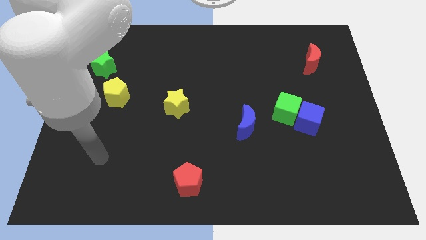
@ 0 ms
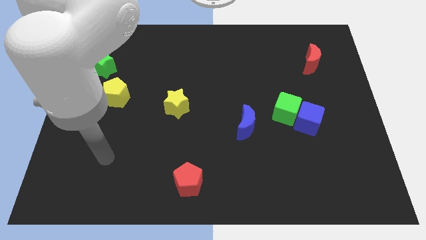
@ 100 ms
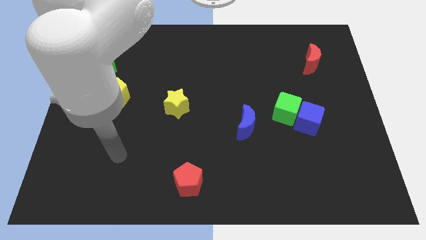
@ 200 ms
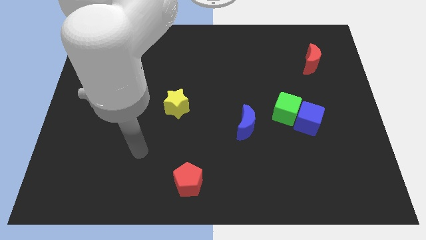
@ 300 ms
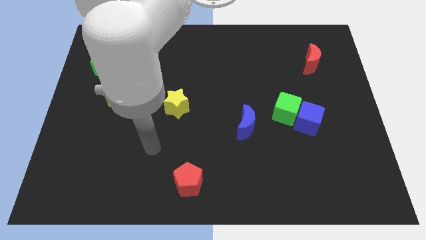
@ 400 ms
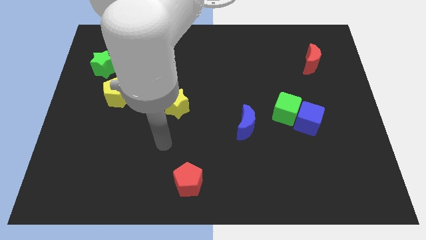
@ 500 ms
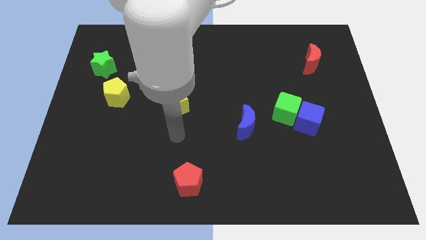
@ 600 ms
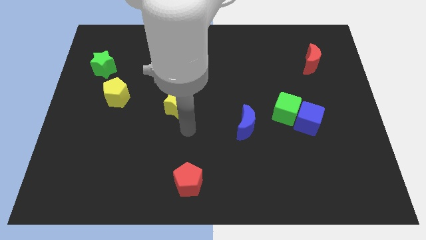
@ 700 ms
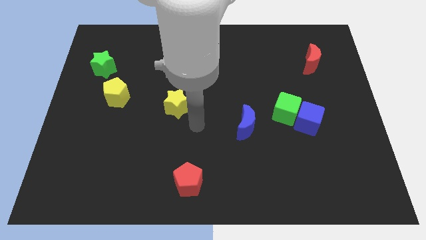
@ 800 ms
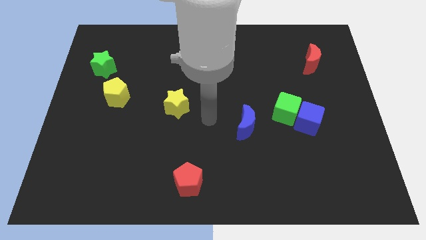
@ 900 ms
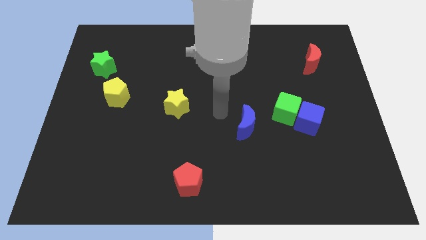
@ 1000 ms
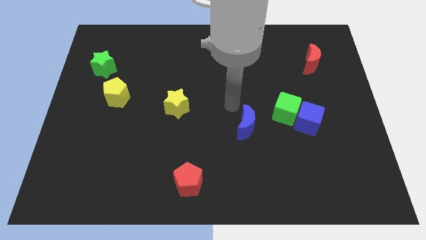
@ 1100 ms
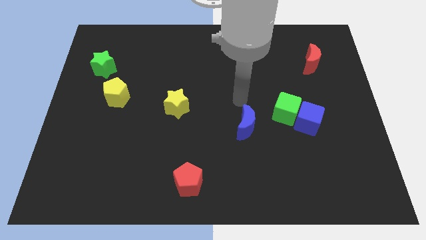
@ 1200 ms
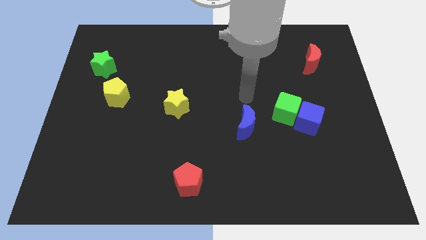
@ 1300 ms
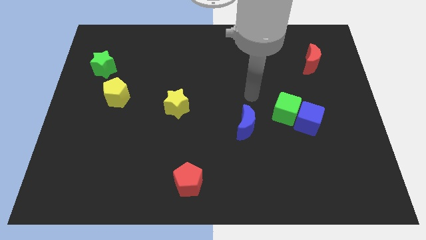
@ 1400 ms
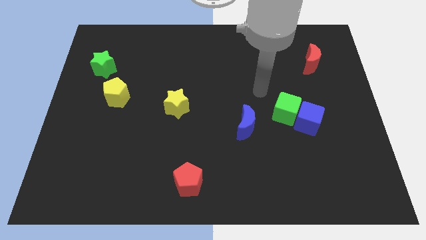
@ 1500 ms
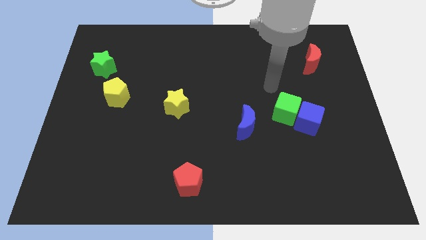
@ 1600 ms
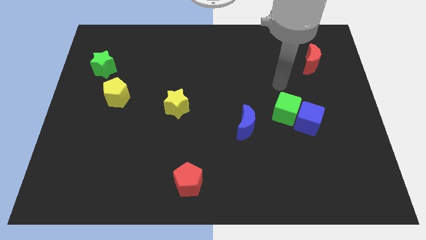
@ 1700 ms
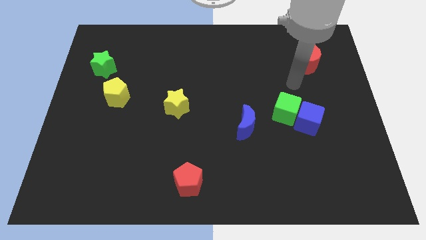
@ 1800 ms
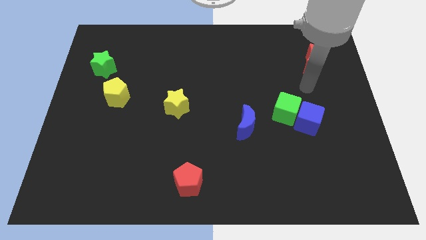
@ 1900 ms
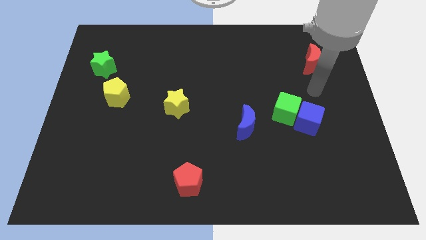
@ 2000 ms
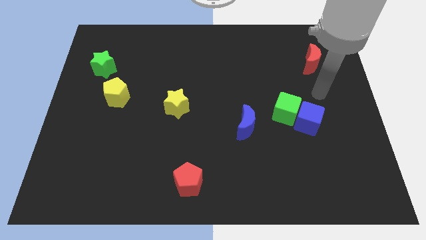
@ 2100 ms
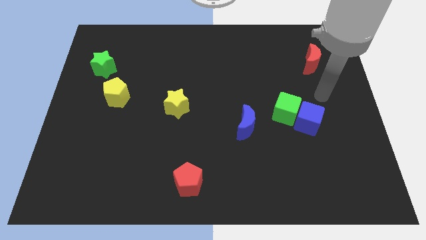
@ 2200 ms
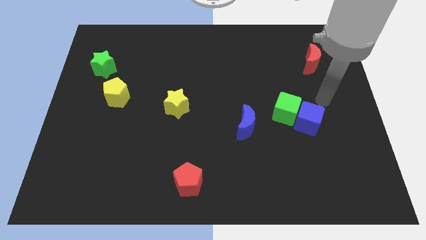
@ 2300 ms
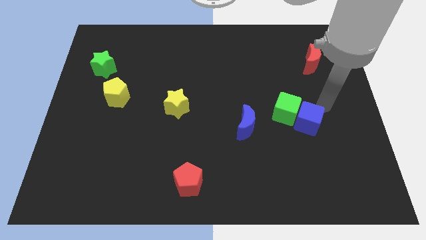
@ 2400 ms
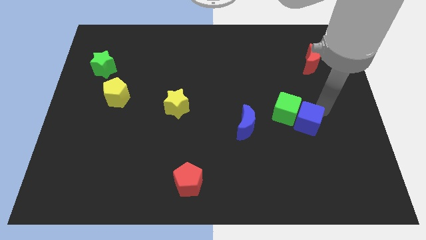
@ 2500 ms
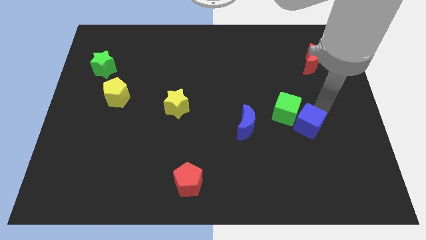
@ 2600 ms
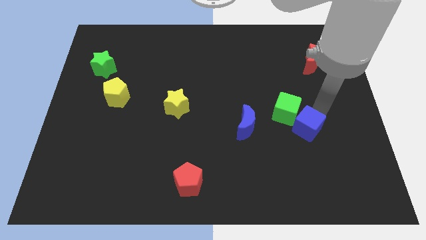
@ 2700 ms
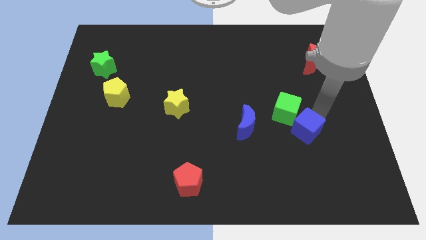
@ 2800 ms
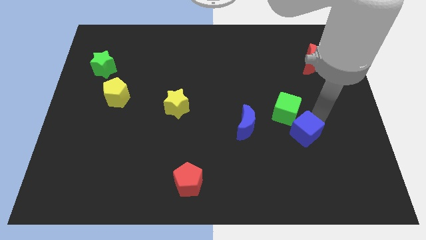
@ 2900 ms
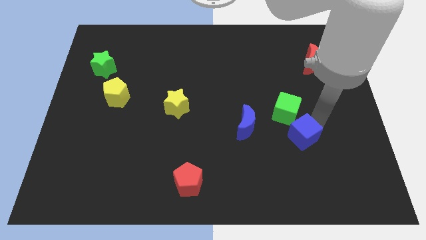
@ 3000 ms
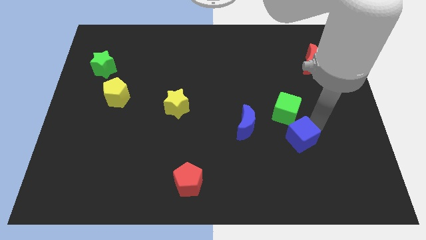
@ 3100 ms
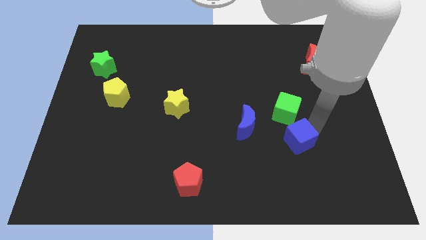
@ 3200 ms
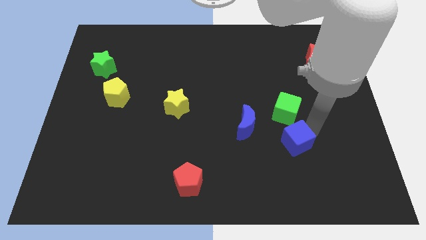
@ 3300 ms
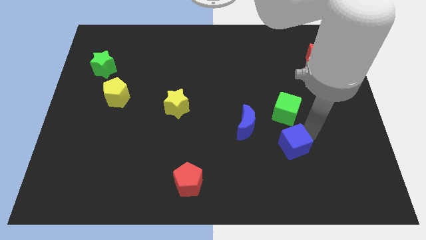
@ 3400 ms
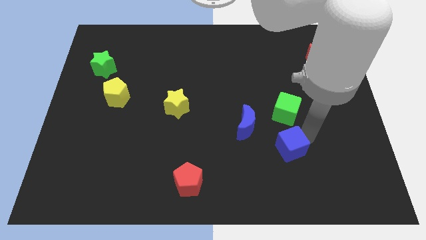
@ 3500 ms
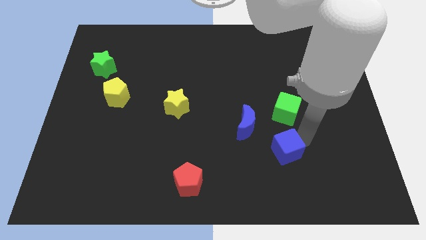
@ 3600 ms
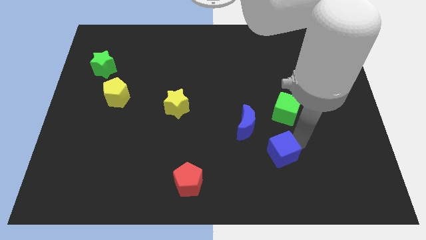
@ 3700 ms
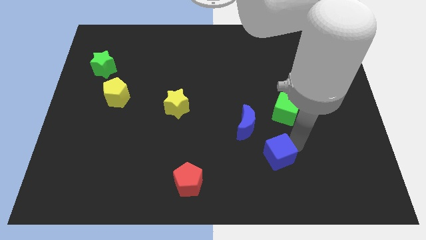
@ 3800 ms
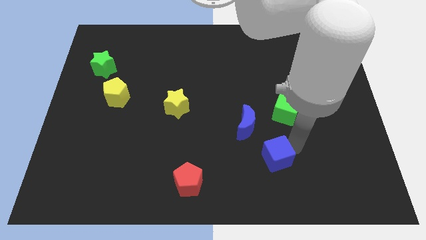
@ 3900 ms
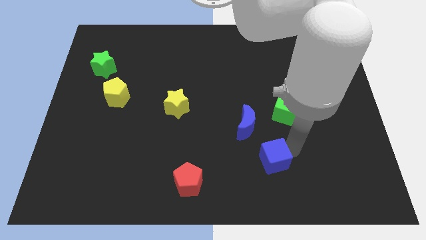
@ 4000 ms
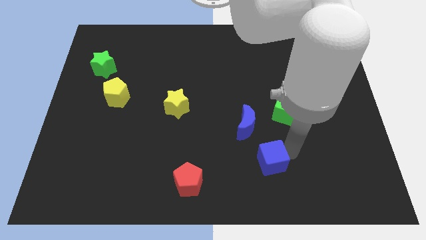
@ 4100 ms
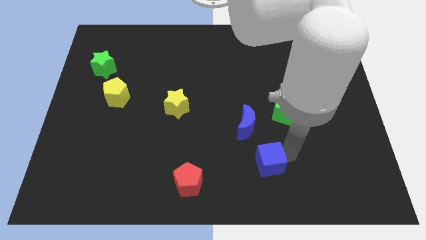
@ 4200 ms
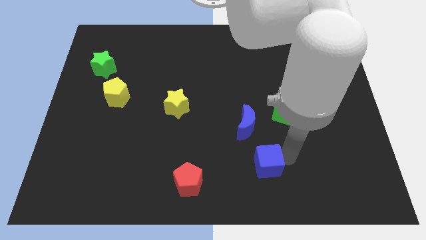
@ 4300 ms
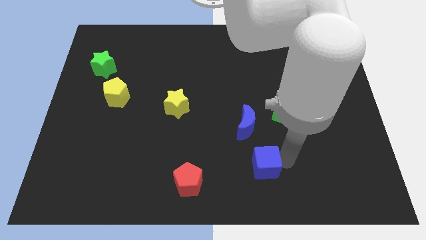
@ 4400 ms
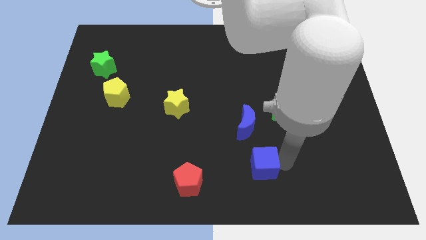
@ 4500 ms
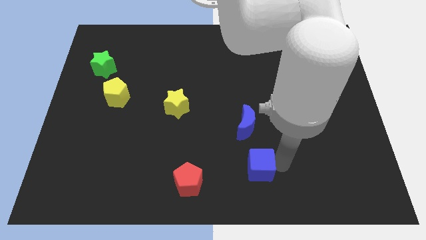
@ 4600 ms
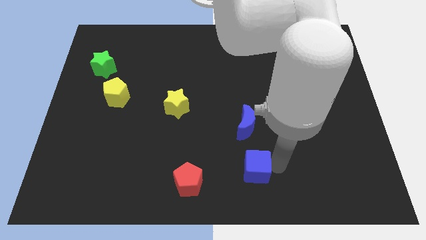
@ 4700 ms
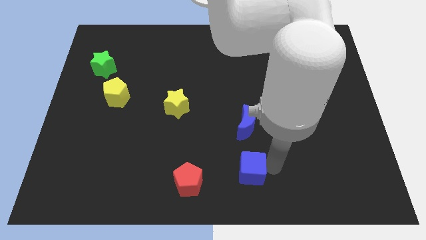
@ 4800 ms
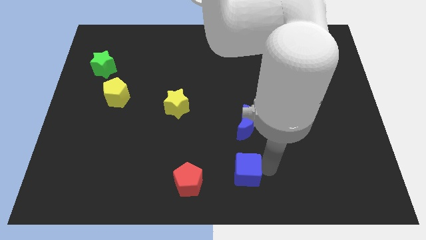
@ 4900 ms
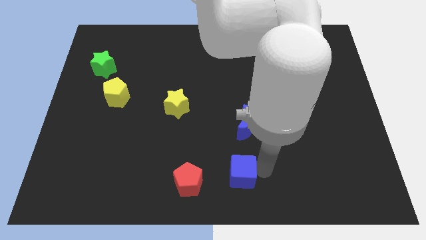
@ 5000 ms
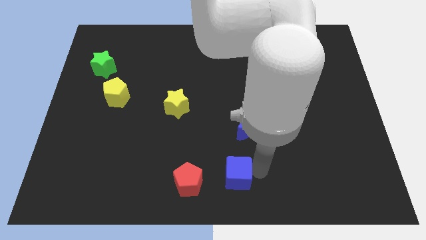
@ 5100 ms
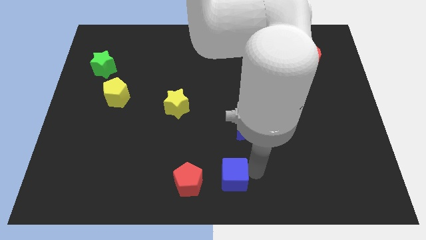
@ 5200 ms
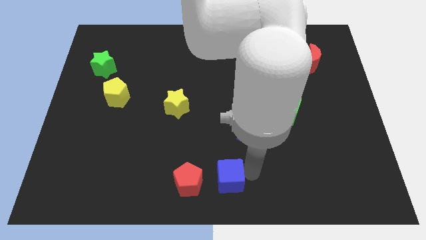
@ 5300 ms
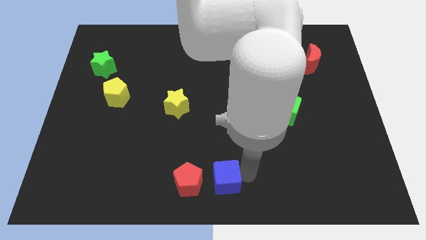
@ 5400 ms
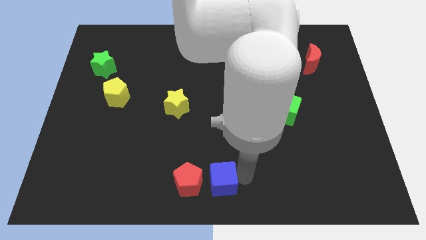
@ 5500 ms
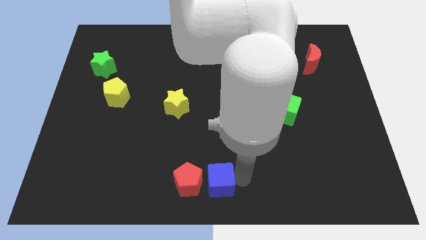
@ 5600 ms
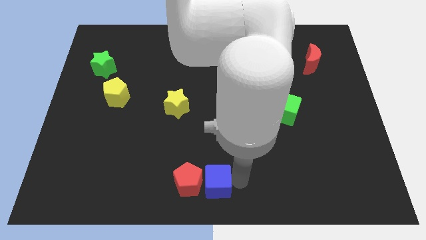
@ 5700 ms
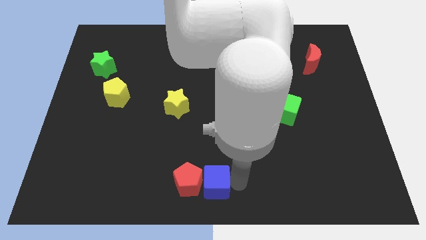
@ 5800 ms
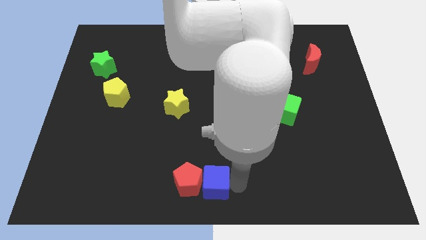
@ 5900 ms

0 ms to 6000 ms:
move the blue cube to the red pentagon

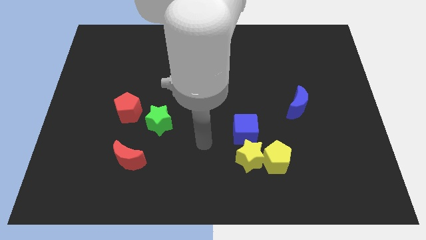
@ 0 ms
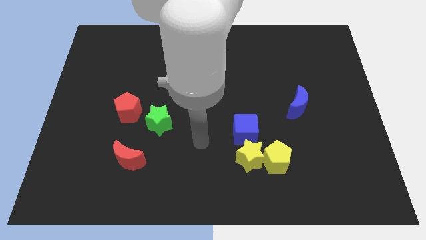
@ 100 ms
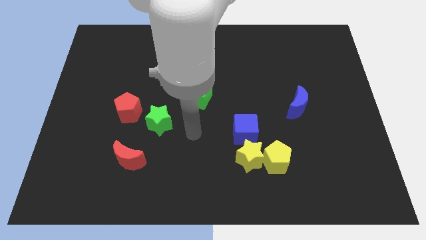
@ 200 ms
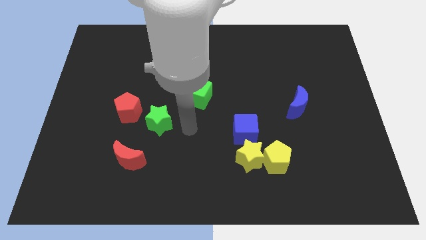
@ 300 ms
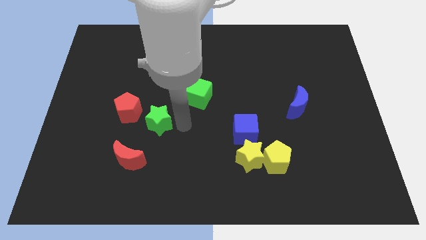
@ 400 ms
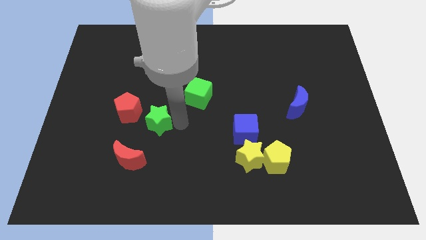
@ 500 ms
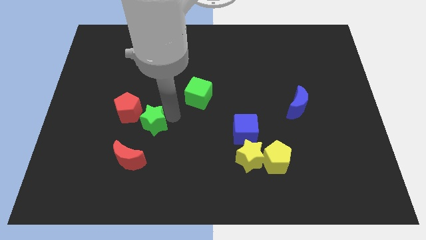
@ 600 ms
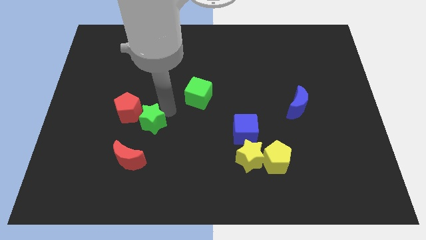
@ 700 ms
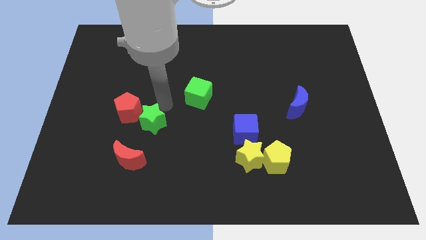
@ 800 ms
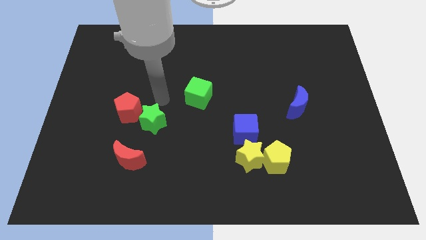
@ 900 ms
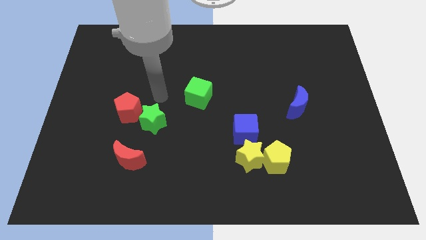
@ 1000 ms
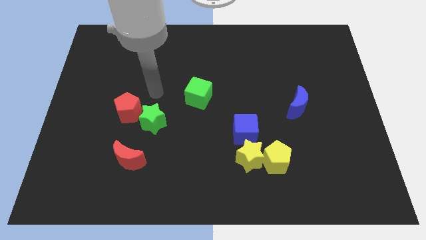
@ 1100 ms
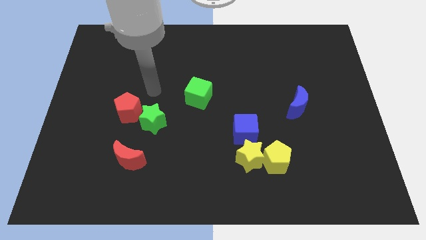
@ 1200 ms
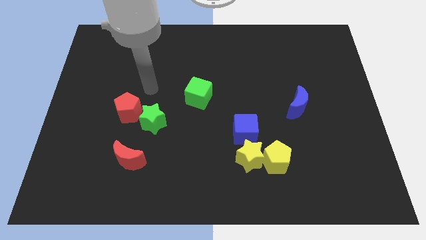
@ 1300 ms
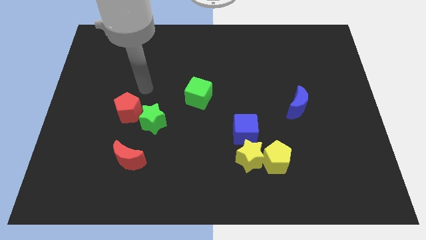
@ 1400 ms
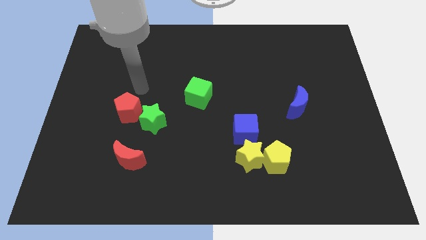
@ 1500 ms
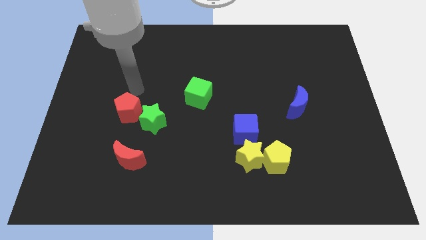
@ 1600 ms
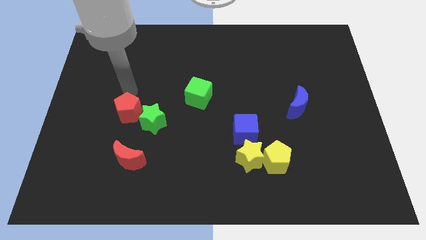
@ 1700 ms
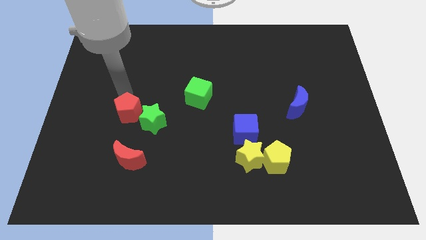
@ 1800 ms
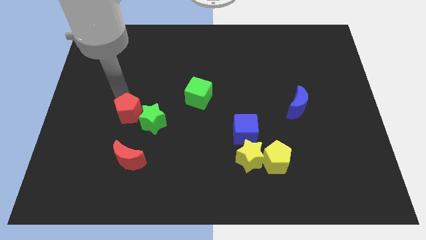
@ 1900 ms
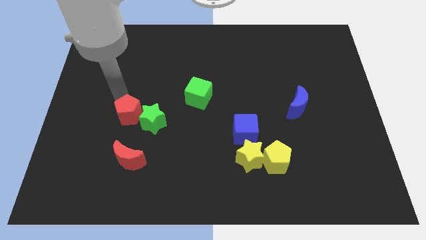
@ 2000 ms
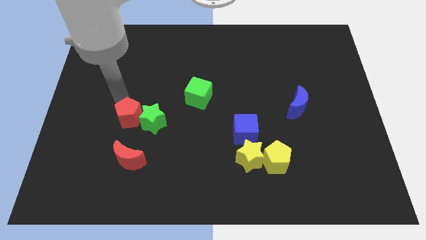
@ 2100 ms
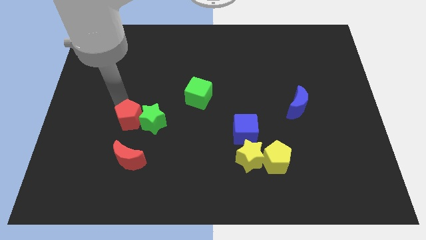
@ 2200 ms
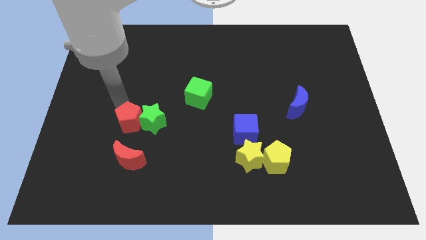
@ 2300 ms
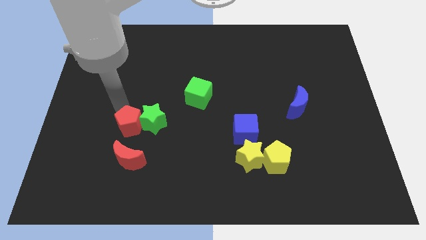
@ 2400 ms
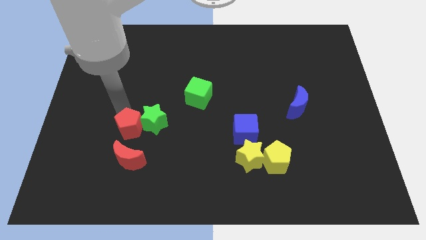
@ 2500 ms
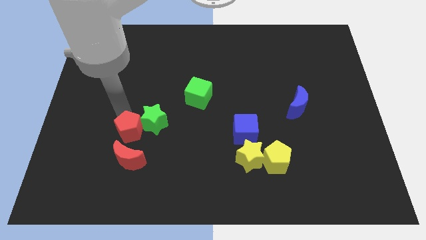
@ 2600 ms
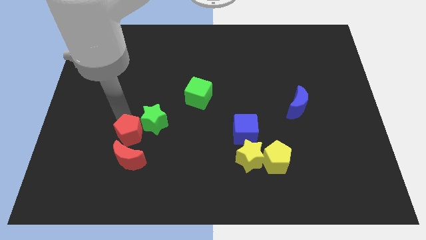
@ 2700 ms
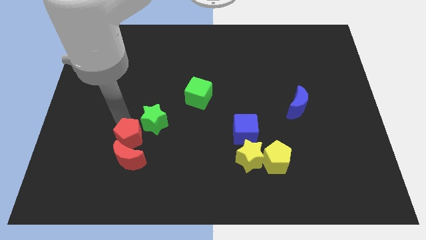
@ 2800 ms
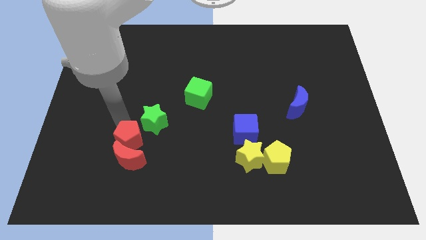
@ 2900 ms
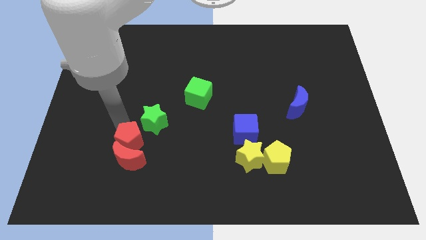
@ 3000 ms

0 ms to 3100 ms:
put the red pentagon close to the red moon

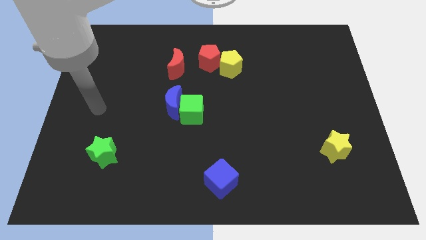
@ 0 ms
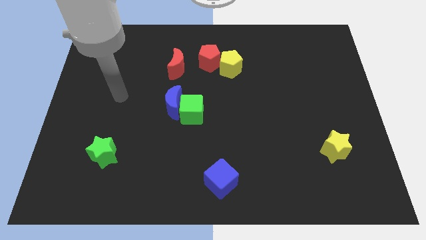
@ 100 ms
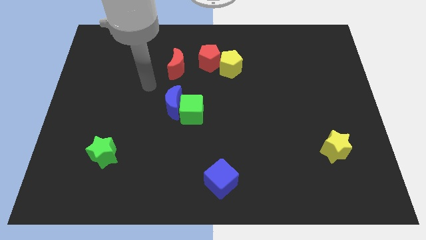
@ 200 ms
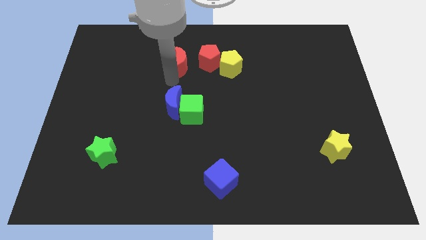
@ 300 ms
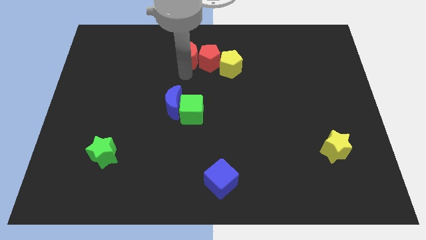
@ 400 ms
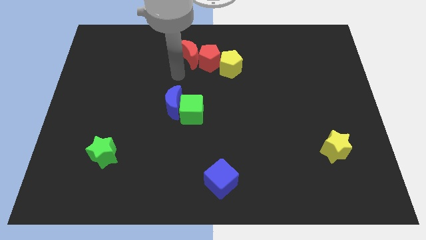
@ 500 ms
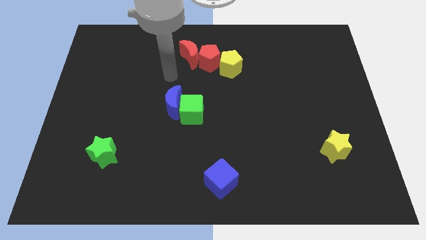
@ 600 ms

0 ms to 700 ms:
slide the red moon close to the red pentagon
